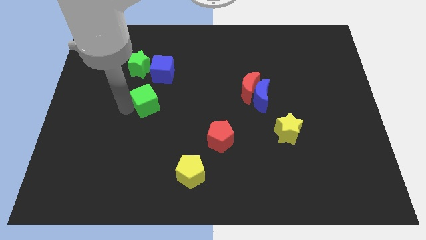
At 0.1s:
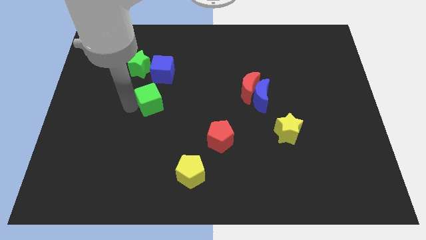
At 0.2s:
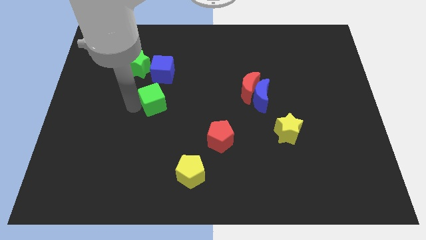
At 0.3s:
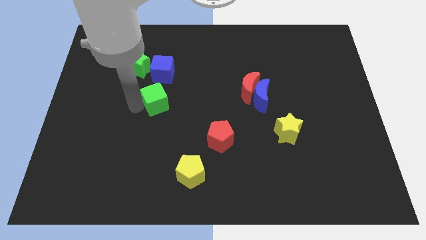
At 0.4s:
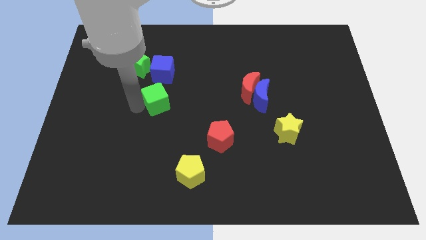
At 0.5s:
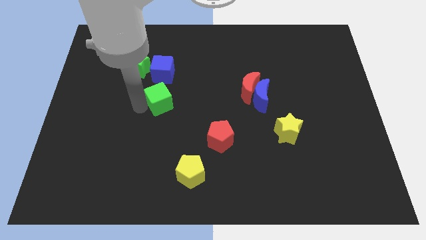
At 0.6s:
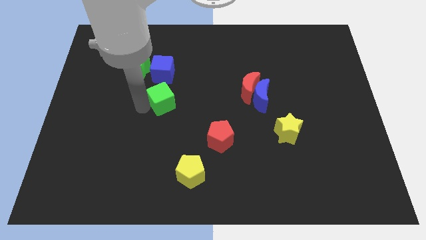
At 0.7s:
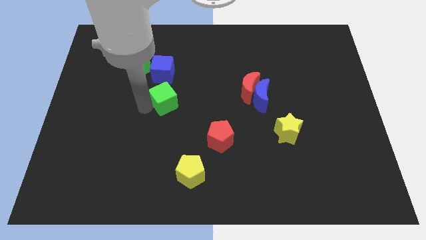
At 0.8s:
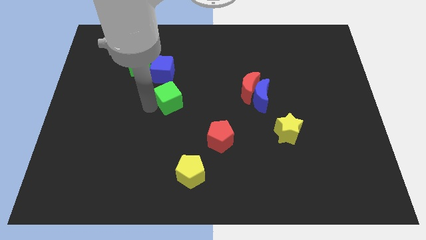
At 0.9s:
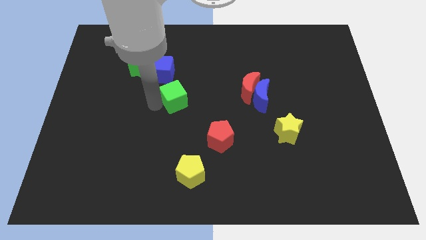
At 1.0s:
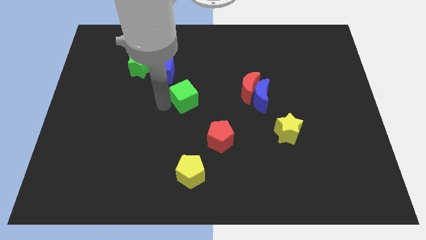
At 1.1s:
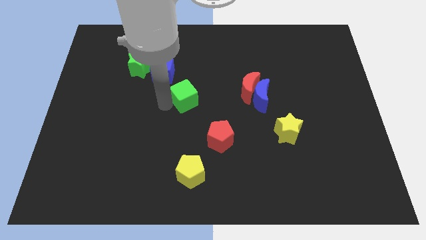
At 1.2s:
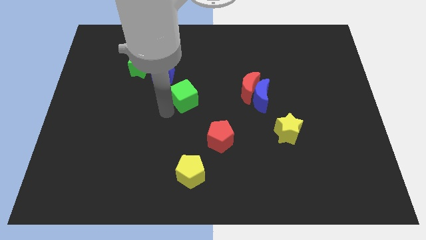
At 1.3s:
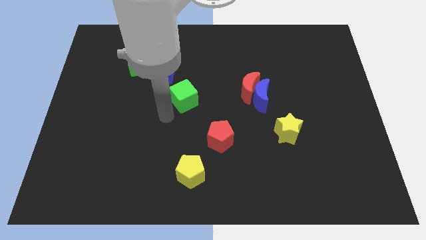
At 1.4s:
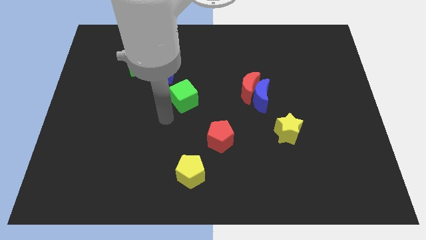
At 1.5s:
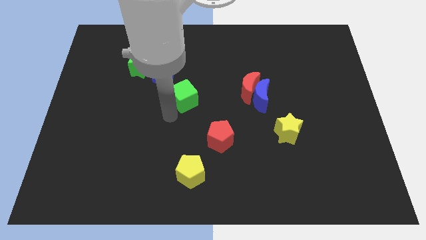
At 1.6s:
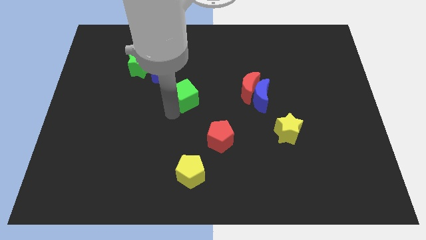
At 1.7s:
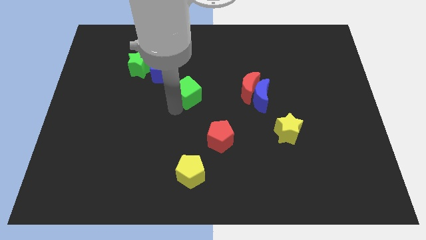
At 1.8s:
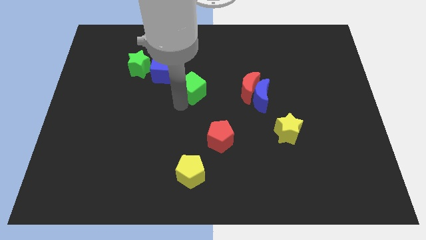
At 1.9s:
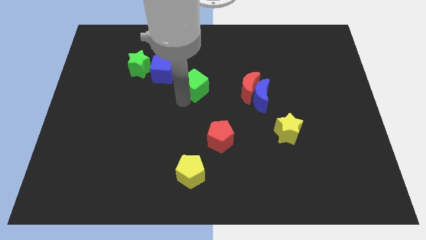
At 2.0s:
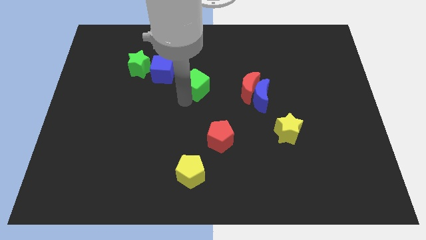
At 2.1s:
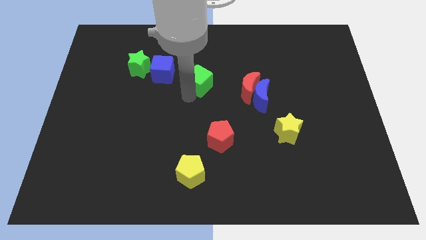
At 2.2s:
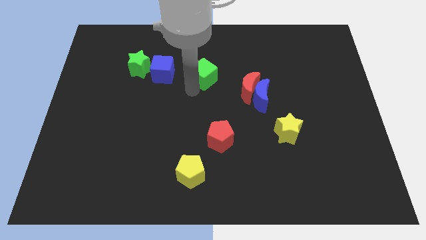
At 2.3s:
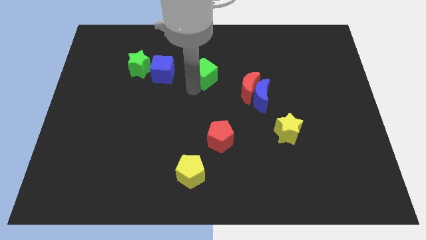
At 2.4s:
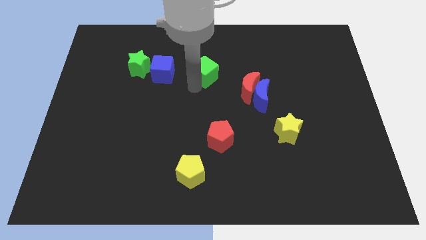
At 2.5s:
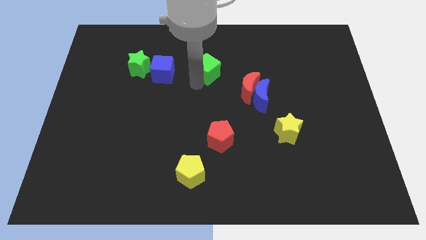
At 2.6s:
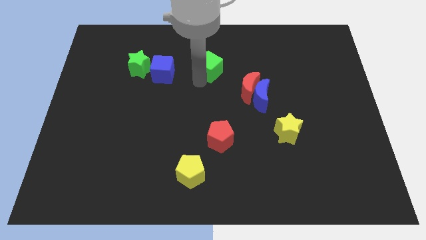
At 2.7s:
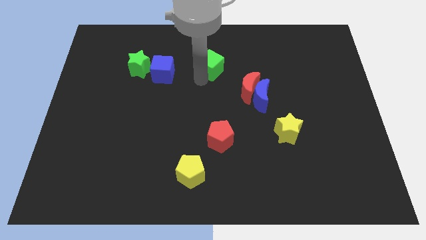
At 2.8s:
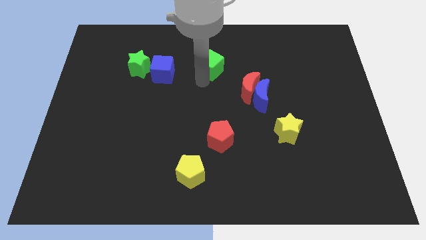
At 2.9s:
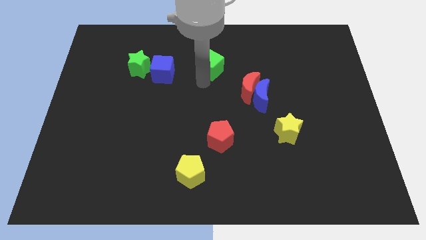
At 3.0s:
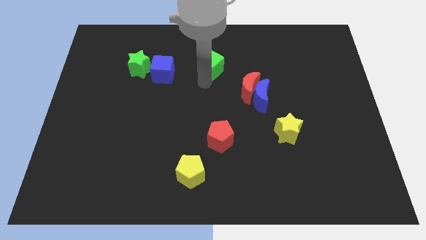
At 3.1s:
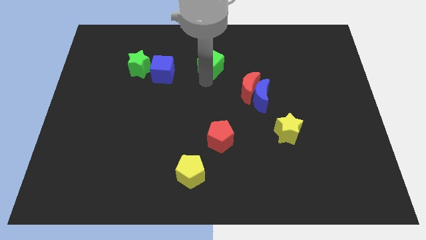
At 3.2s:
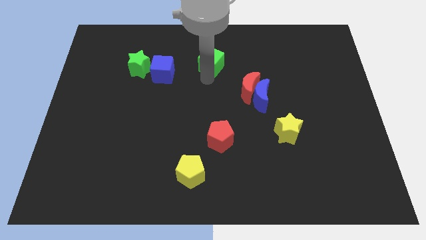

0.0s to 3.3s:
move the green cube to the right of the blue cube

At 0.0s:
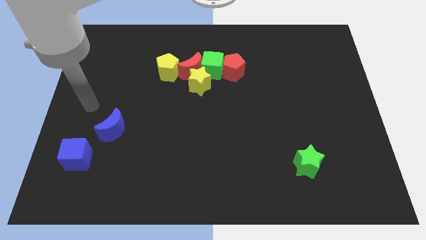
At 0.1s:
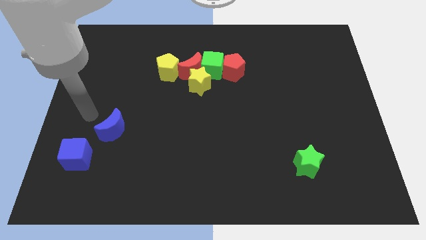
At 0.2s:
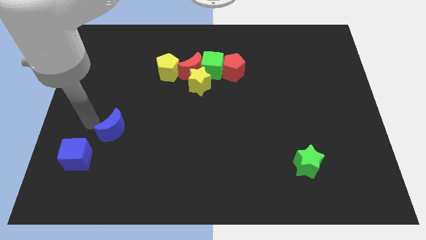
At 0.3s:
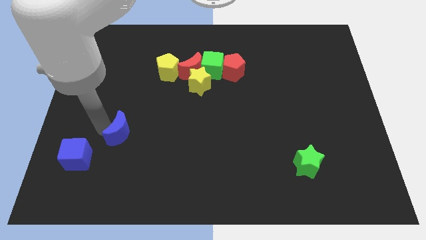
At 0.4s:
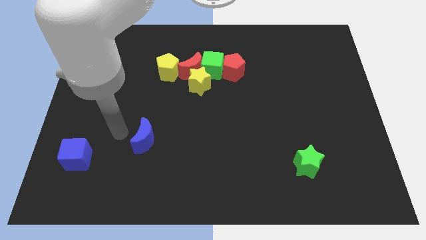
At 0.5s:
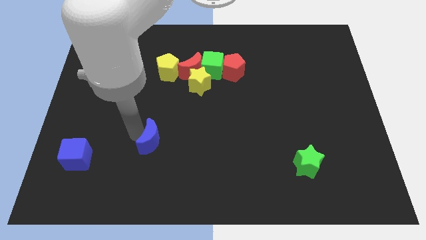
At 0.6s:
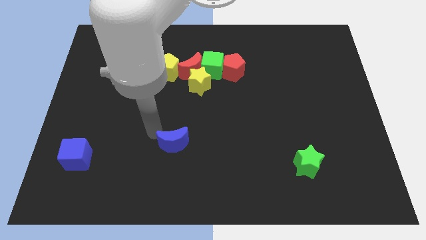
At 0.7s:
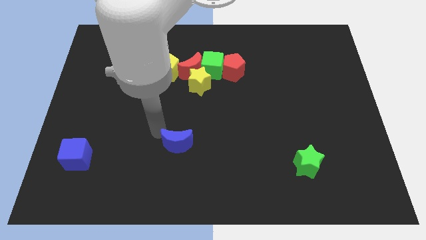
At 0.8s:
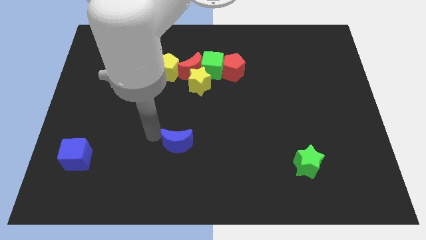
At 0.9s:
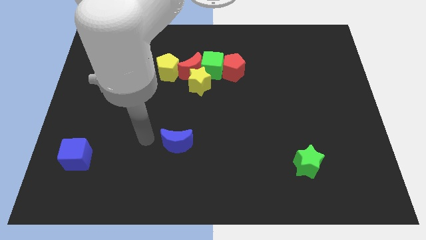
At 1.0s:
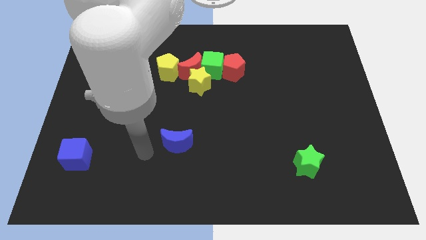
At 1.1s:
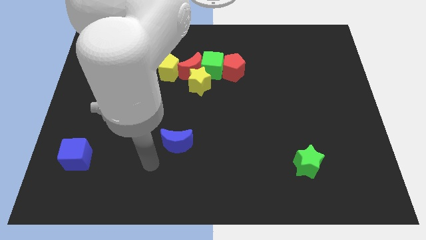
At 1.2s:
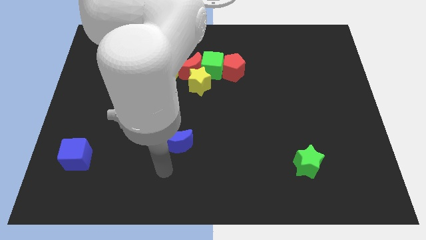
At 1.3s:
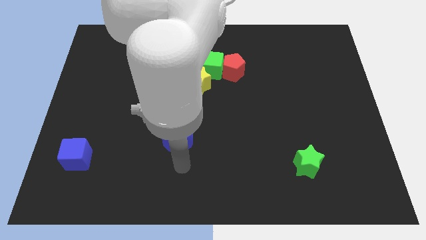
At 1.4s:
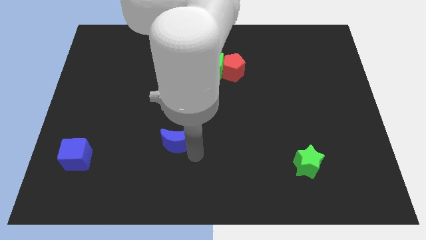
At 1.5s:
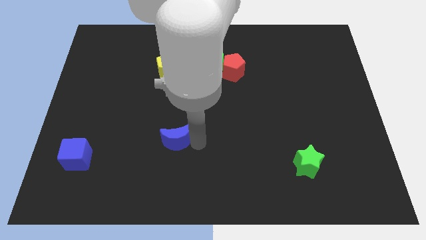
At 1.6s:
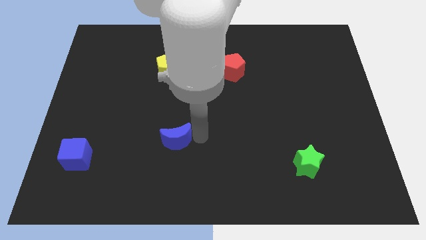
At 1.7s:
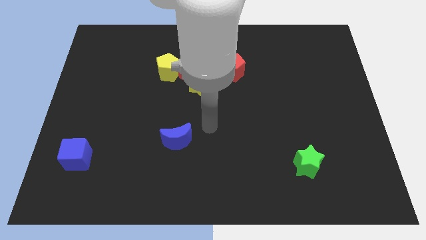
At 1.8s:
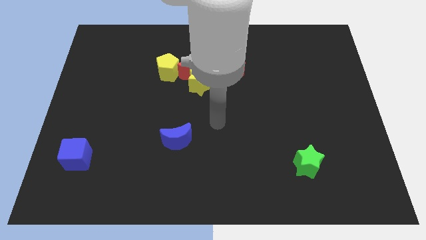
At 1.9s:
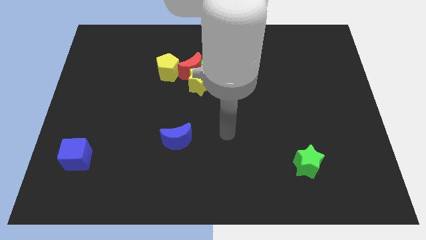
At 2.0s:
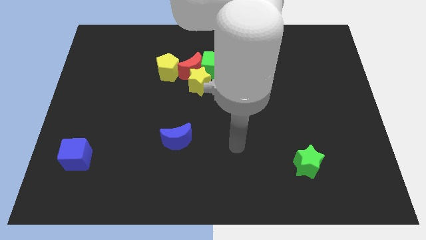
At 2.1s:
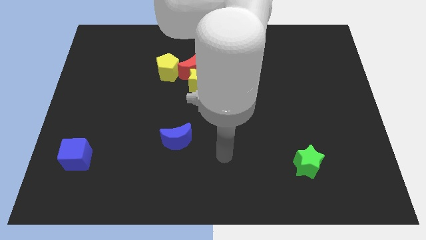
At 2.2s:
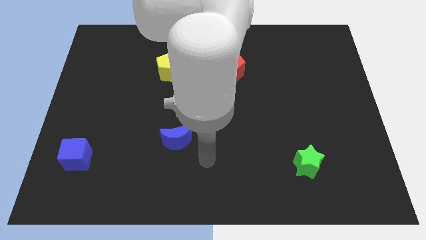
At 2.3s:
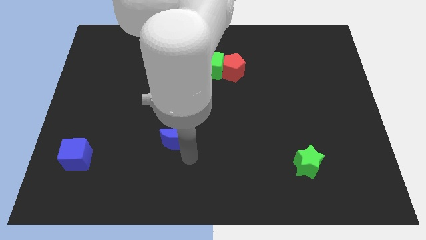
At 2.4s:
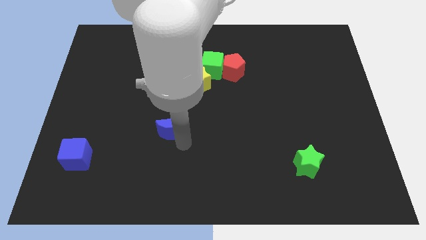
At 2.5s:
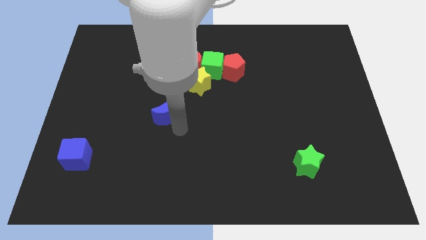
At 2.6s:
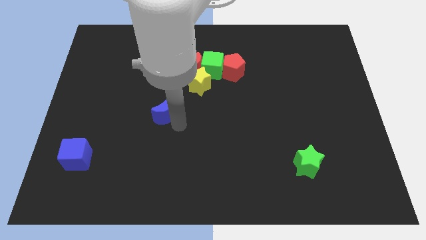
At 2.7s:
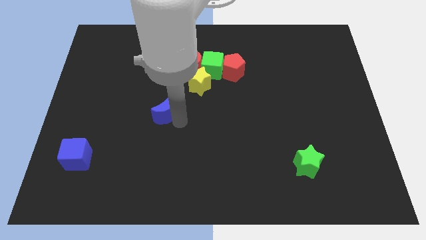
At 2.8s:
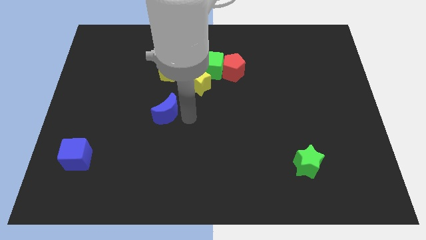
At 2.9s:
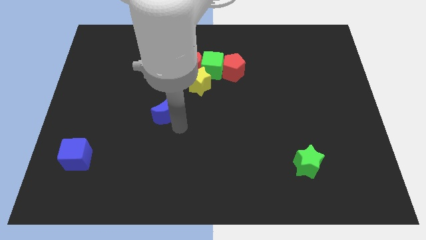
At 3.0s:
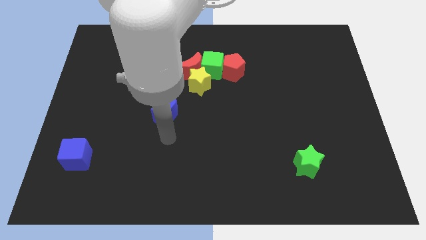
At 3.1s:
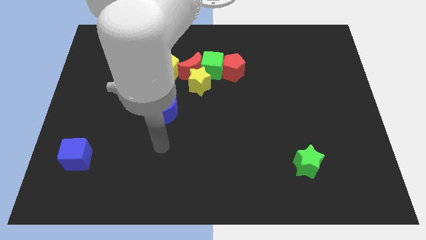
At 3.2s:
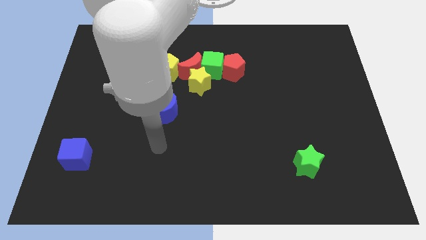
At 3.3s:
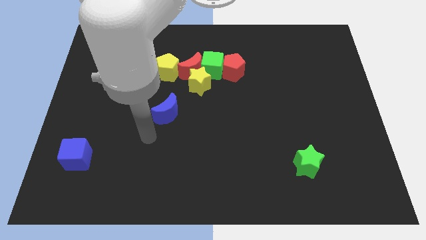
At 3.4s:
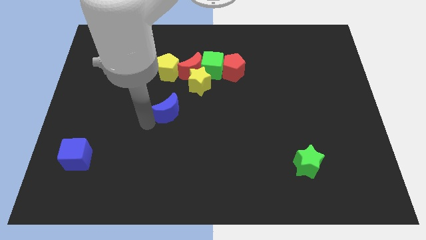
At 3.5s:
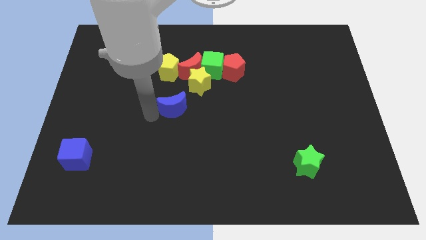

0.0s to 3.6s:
move the blue crescent away from the blue cube

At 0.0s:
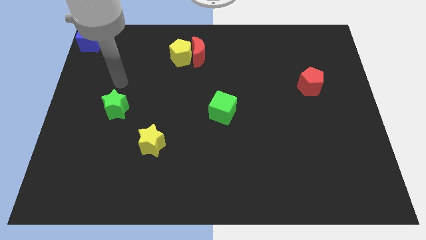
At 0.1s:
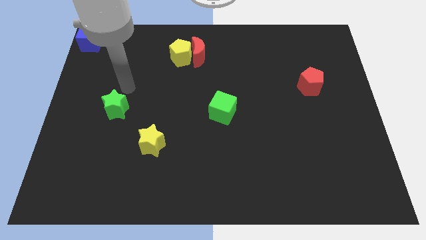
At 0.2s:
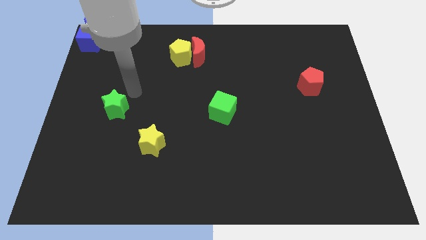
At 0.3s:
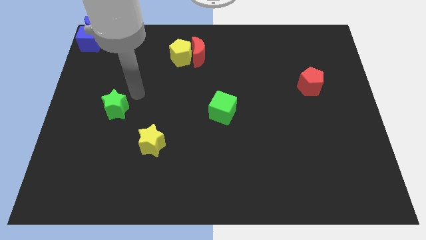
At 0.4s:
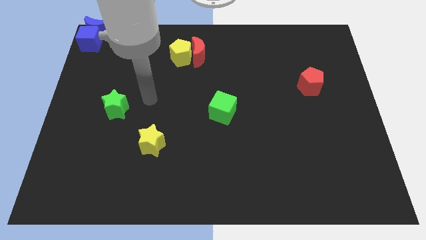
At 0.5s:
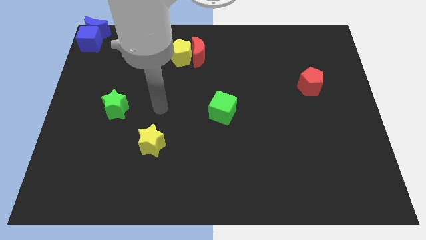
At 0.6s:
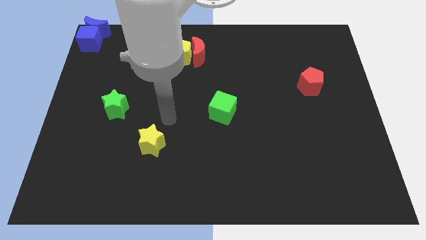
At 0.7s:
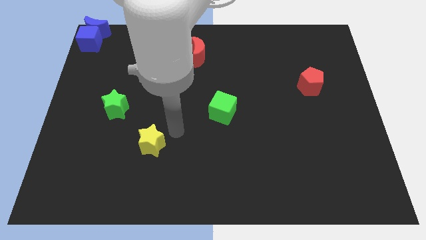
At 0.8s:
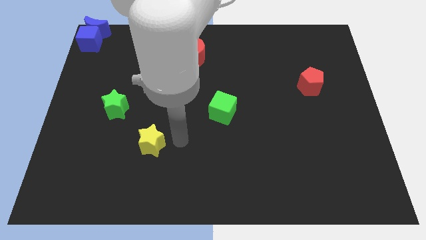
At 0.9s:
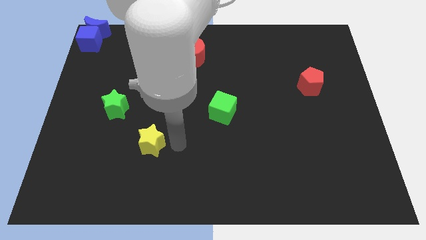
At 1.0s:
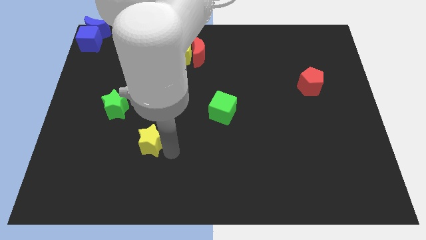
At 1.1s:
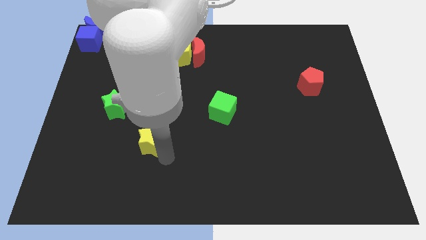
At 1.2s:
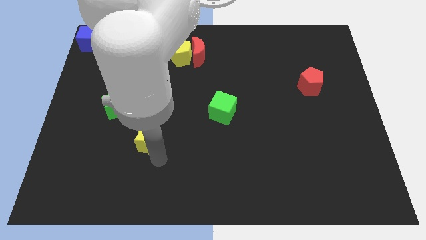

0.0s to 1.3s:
touch the bottom of yellow star

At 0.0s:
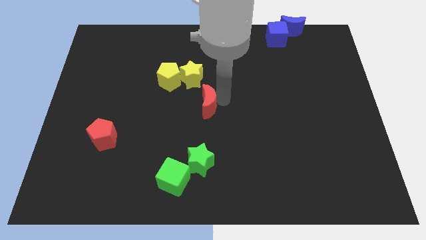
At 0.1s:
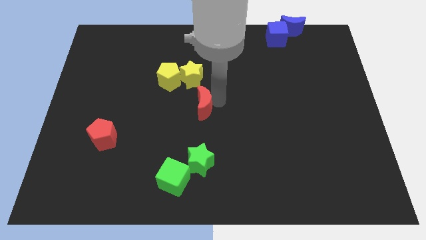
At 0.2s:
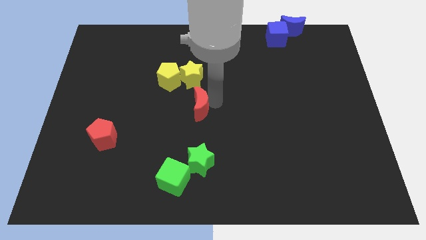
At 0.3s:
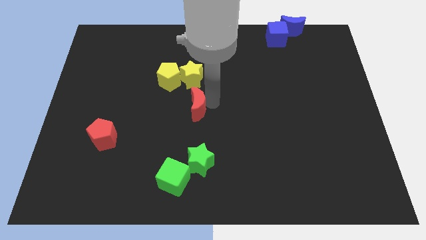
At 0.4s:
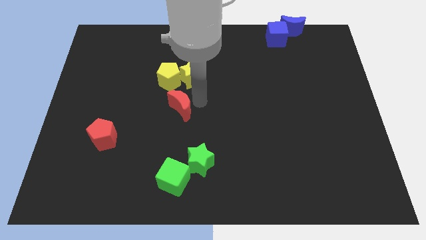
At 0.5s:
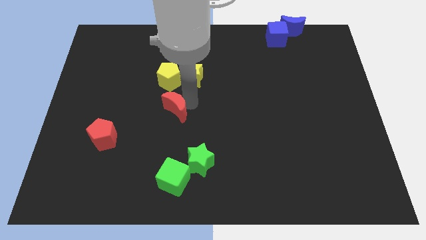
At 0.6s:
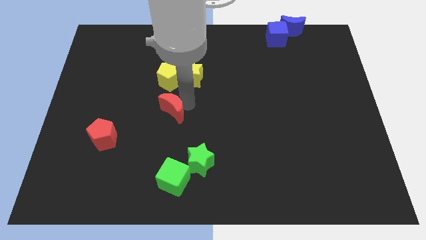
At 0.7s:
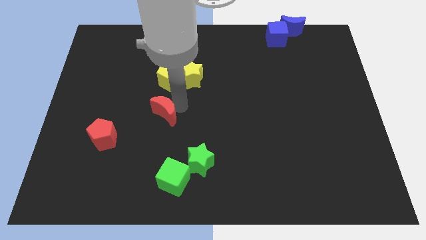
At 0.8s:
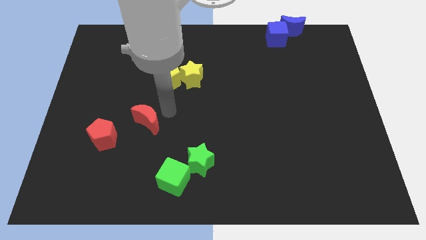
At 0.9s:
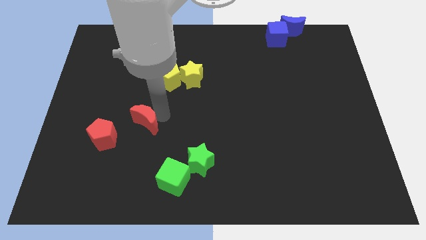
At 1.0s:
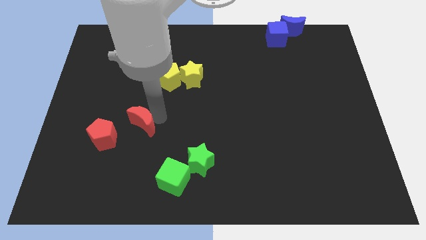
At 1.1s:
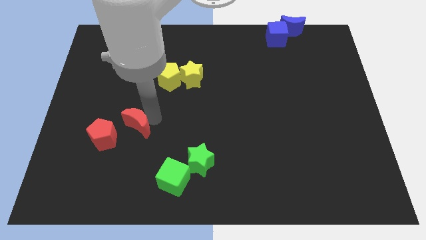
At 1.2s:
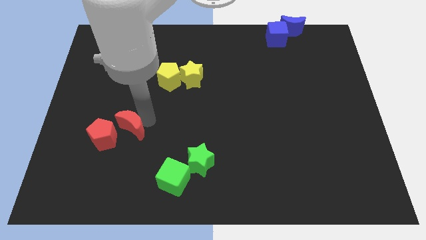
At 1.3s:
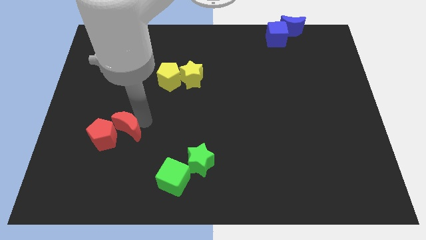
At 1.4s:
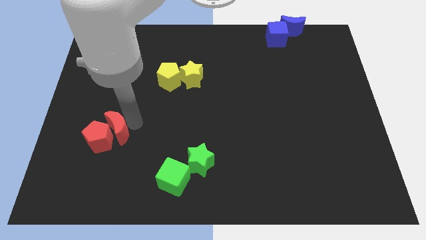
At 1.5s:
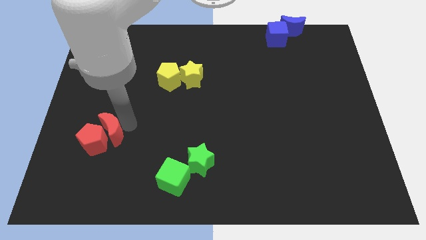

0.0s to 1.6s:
move the red crescent into the red pentagon
